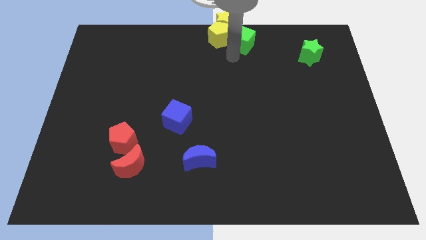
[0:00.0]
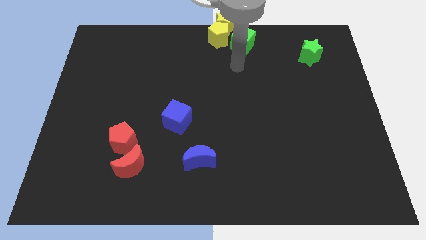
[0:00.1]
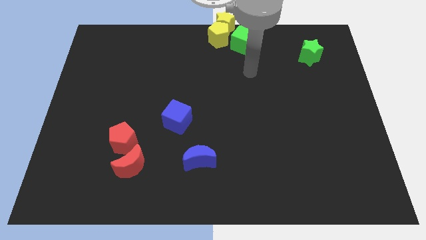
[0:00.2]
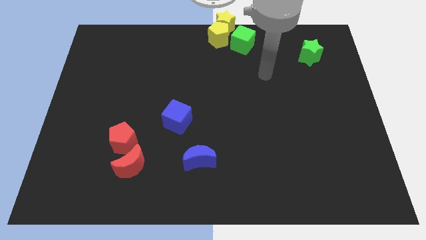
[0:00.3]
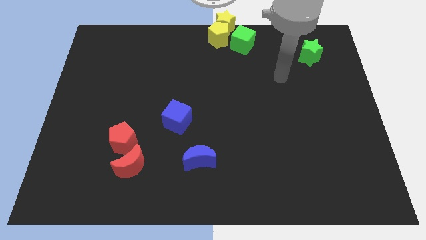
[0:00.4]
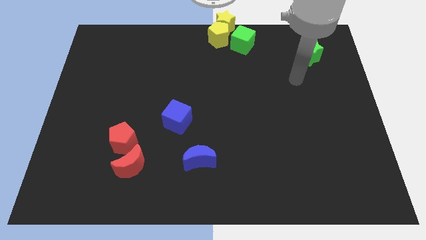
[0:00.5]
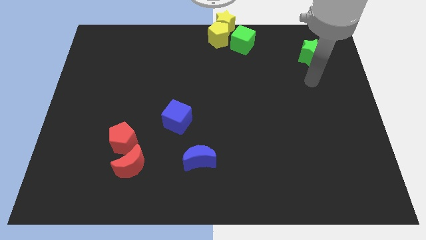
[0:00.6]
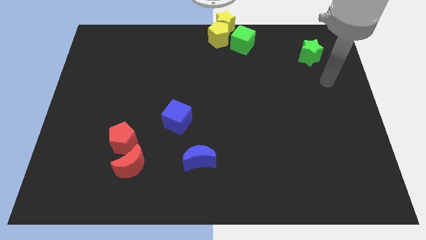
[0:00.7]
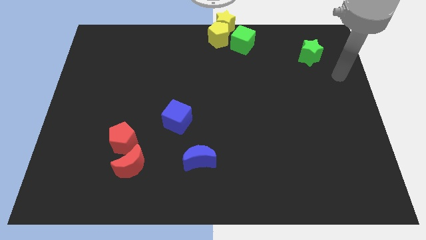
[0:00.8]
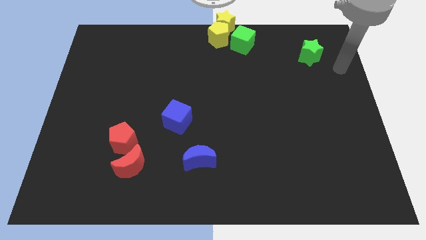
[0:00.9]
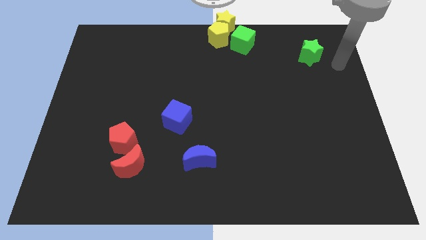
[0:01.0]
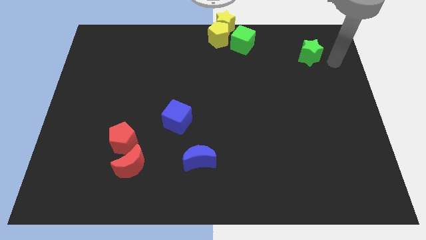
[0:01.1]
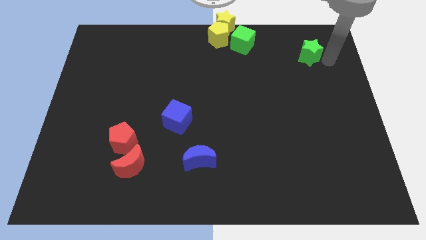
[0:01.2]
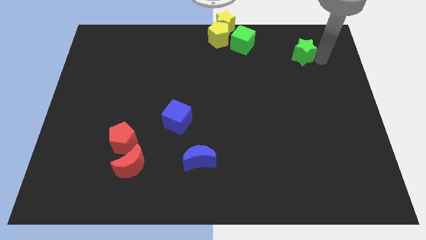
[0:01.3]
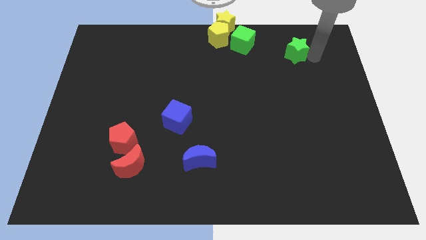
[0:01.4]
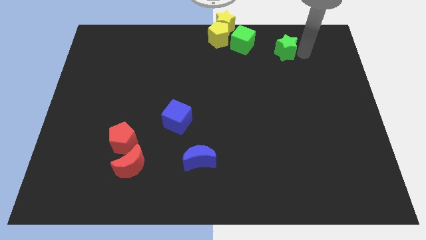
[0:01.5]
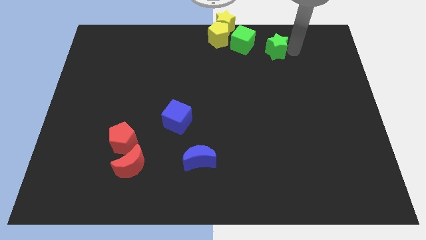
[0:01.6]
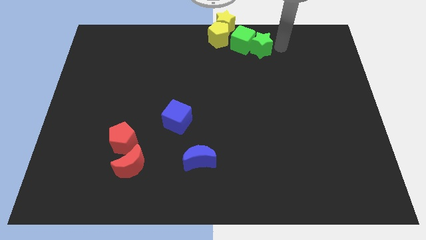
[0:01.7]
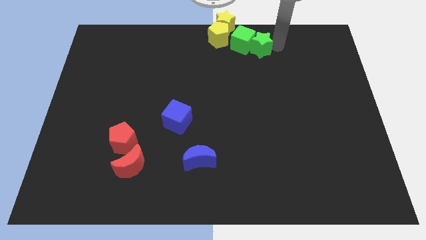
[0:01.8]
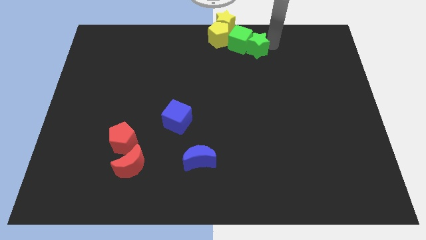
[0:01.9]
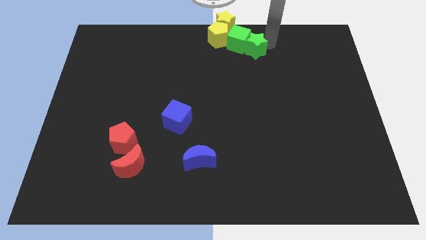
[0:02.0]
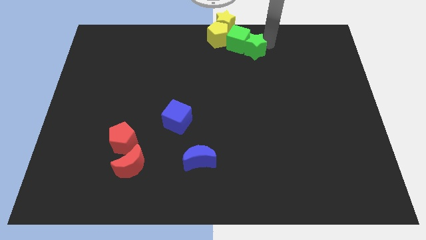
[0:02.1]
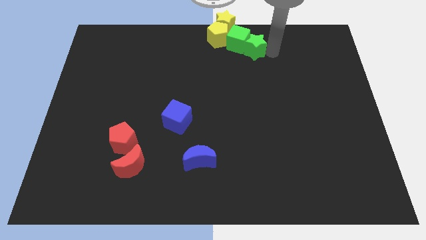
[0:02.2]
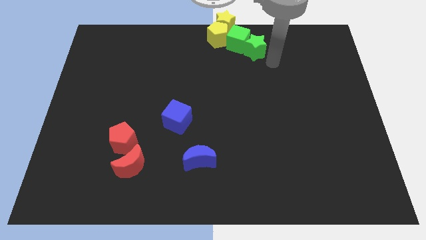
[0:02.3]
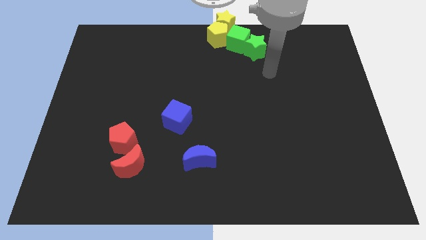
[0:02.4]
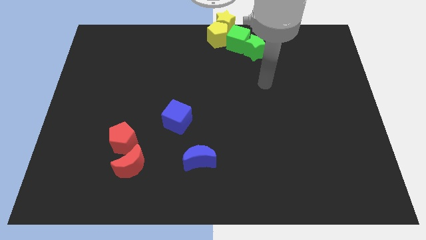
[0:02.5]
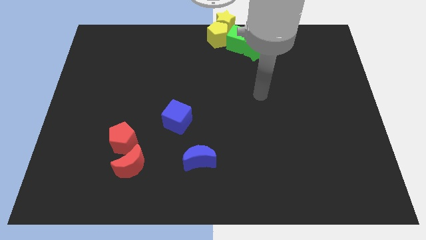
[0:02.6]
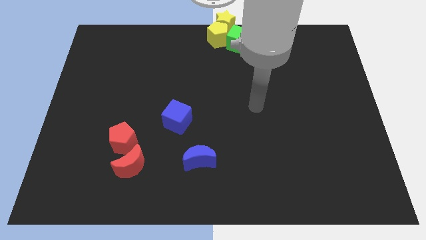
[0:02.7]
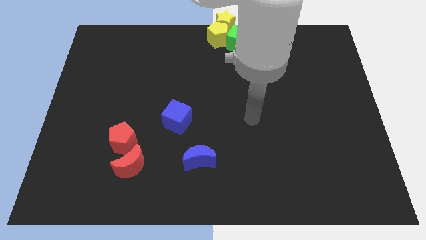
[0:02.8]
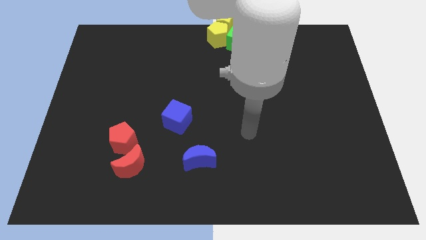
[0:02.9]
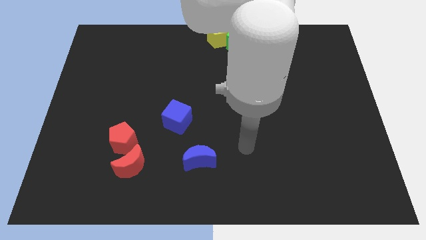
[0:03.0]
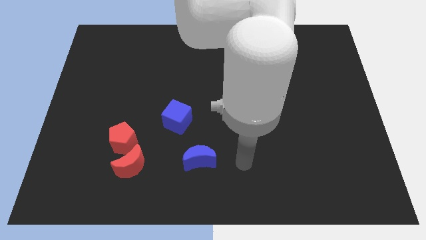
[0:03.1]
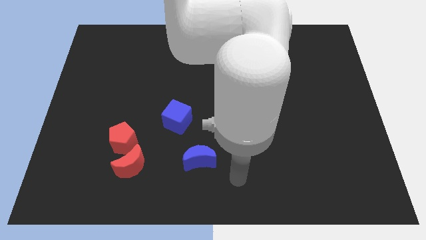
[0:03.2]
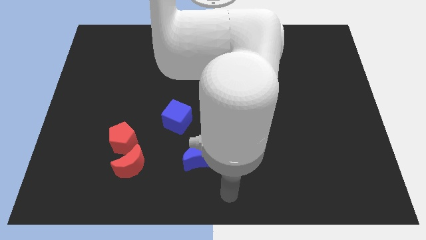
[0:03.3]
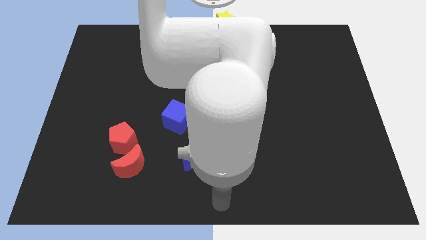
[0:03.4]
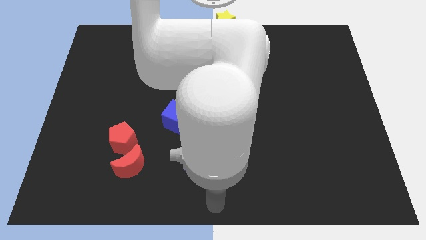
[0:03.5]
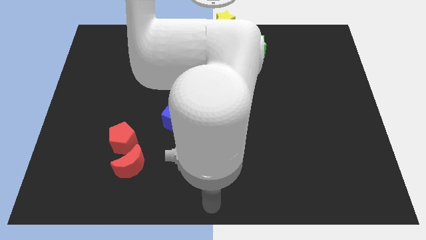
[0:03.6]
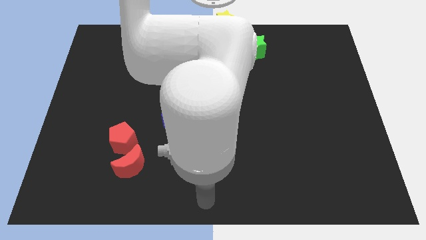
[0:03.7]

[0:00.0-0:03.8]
move the green star into the green cube

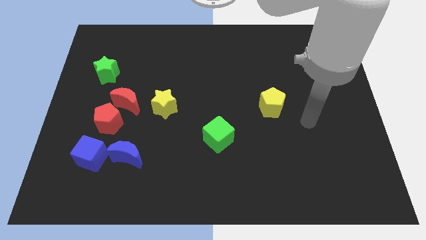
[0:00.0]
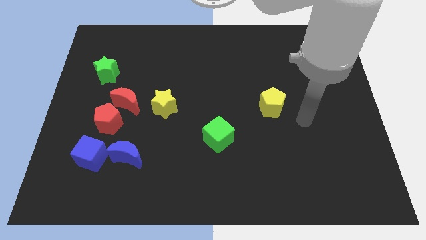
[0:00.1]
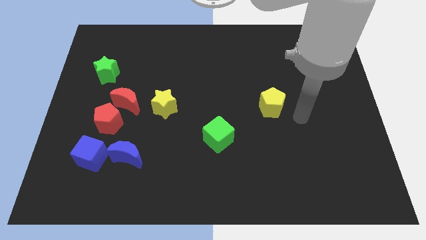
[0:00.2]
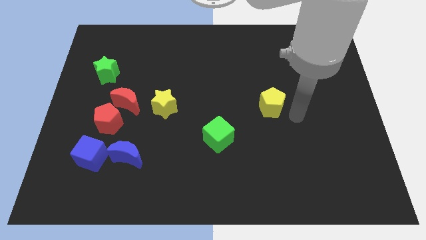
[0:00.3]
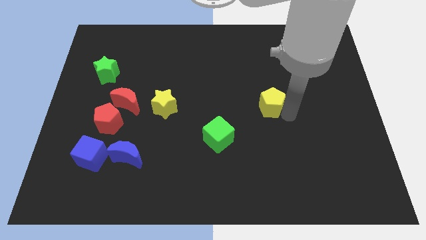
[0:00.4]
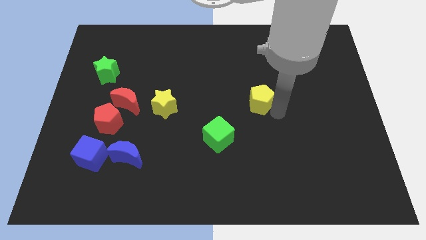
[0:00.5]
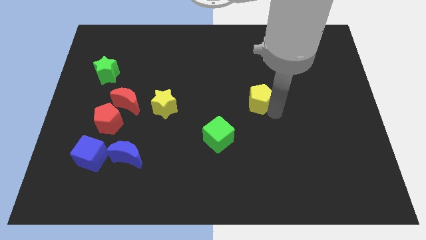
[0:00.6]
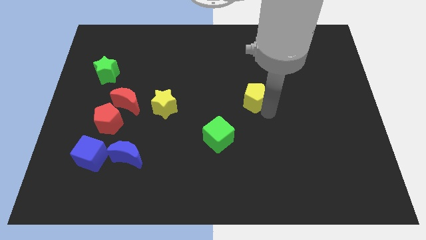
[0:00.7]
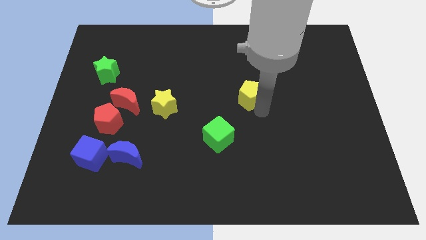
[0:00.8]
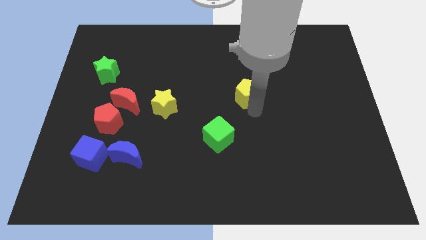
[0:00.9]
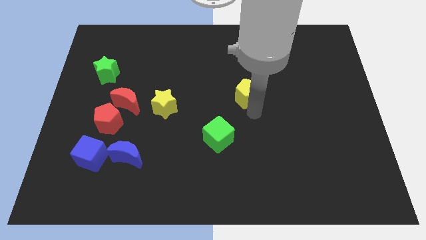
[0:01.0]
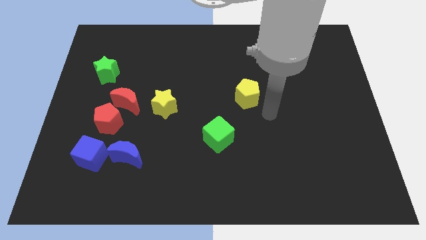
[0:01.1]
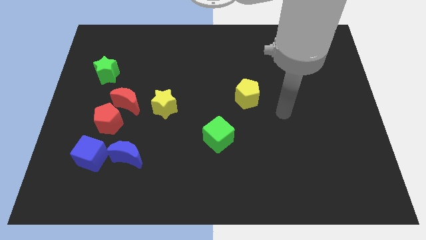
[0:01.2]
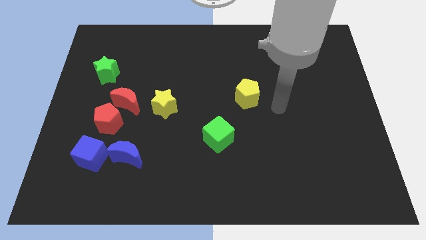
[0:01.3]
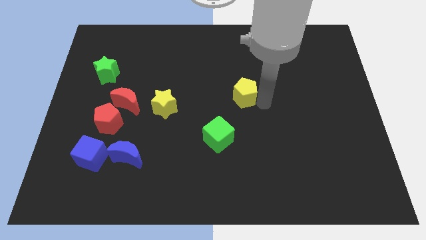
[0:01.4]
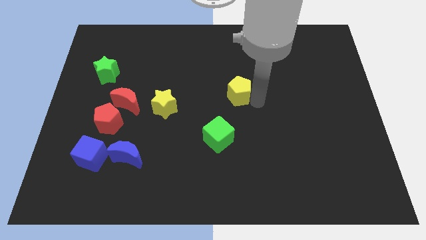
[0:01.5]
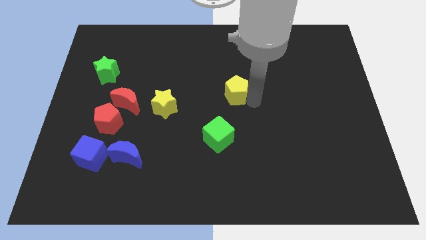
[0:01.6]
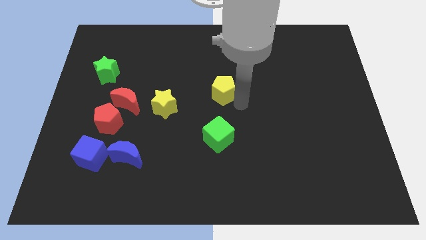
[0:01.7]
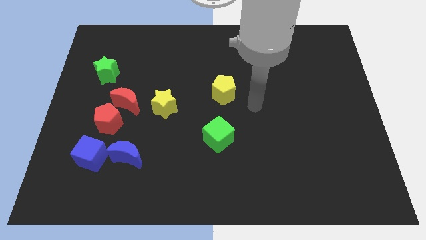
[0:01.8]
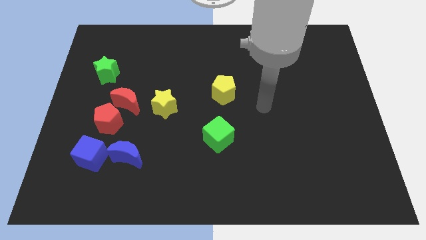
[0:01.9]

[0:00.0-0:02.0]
put the yellow pentagon above the green cube

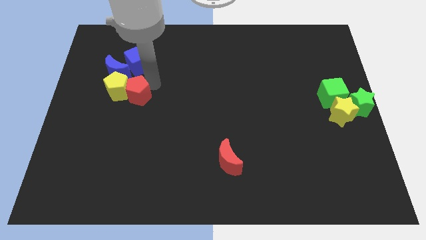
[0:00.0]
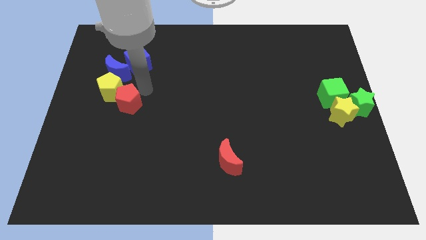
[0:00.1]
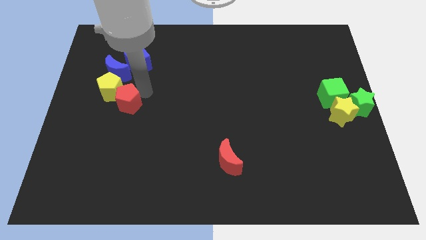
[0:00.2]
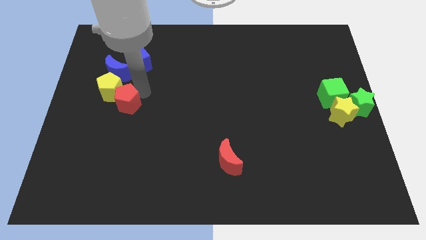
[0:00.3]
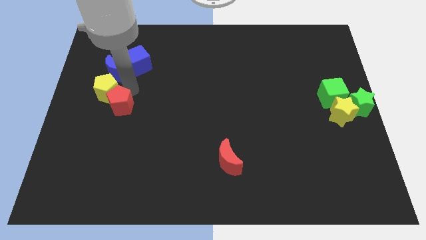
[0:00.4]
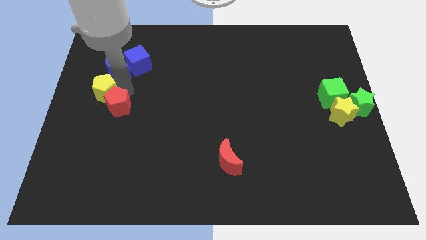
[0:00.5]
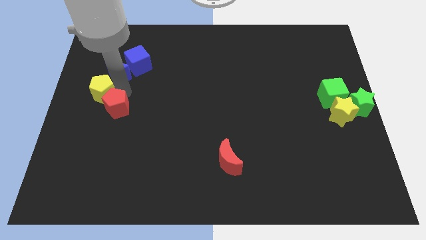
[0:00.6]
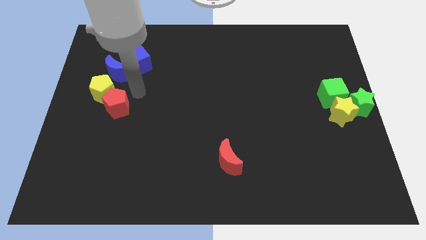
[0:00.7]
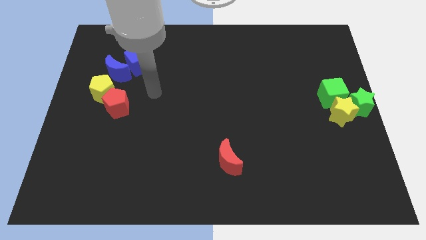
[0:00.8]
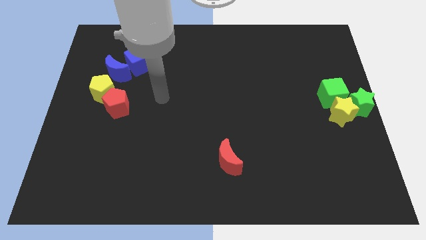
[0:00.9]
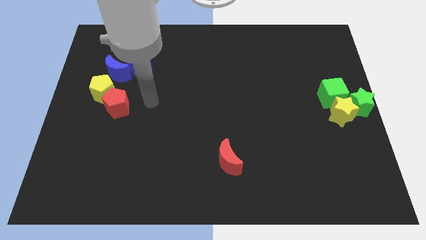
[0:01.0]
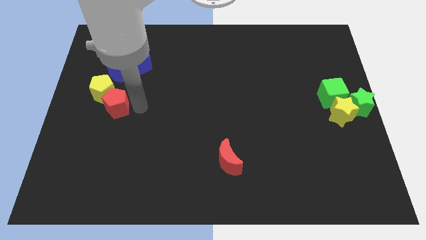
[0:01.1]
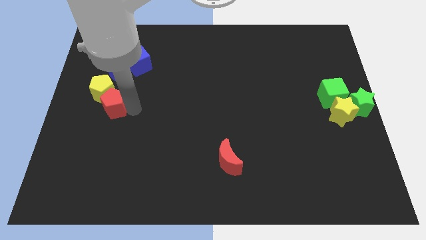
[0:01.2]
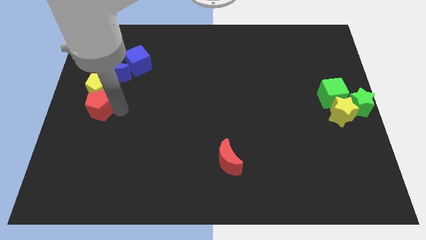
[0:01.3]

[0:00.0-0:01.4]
push the red pentagon to the bottom of the yellow pentagon

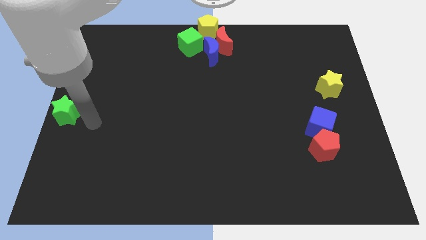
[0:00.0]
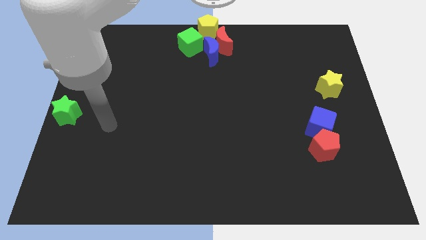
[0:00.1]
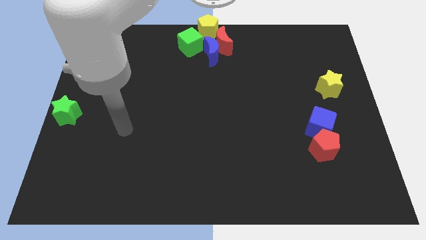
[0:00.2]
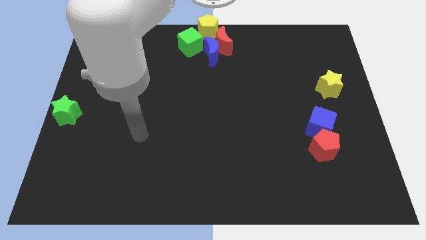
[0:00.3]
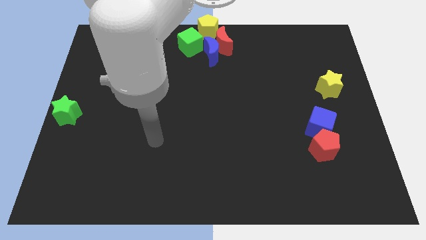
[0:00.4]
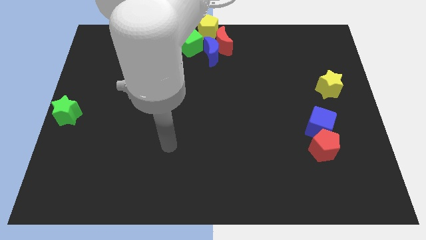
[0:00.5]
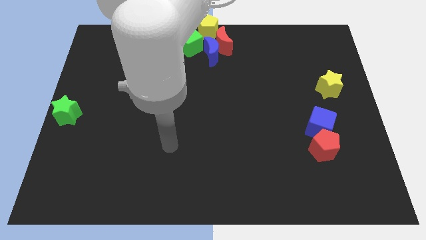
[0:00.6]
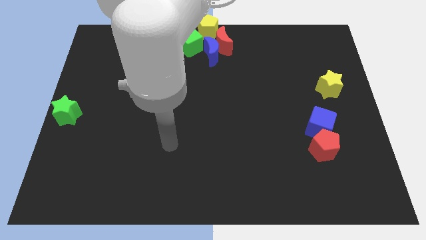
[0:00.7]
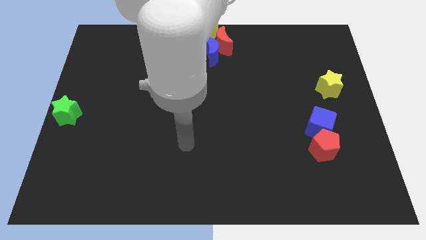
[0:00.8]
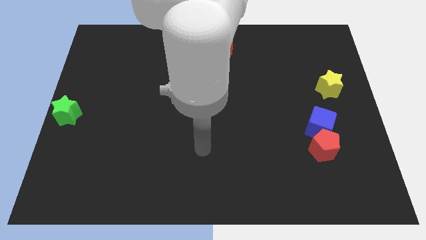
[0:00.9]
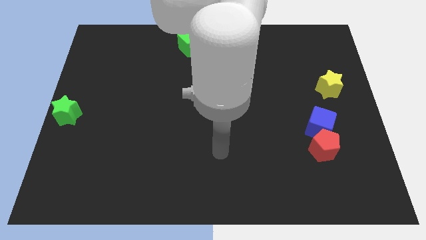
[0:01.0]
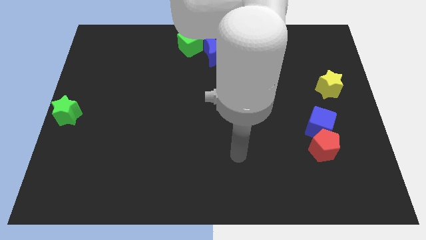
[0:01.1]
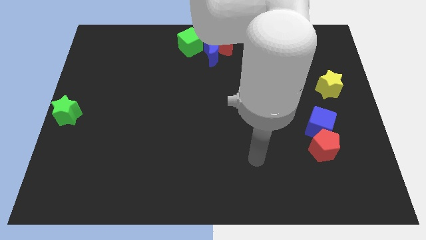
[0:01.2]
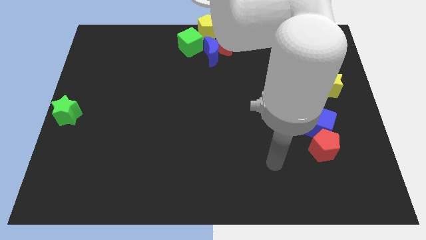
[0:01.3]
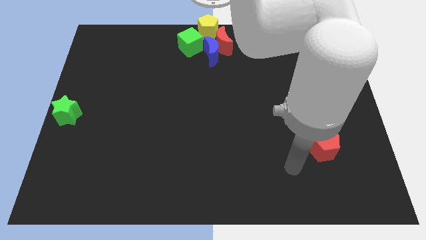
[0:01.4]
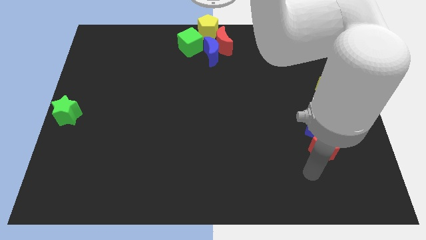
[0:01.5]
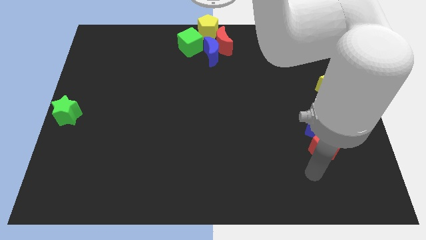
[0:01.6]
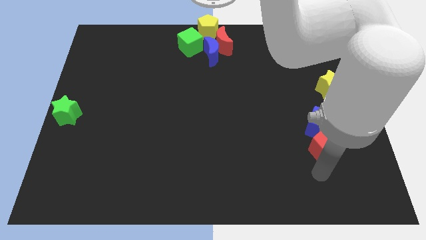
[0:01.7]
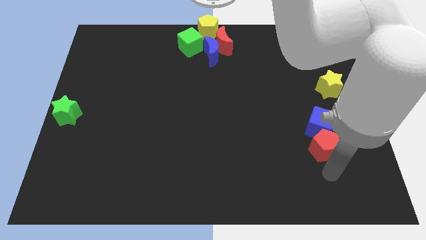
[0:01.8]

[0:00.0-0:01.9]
slide your arm to the bottom side of the red pentagon
